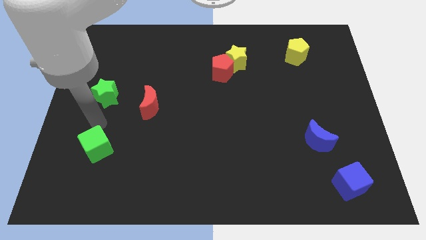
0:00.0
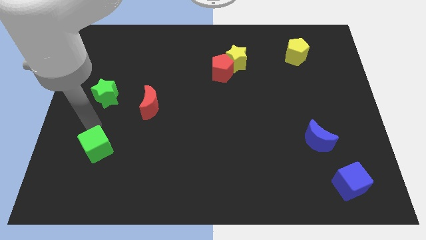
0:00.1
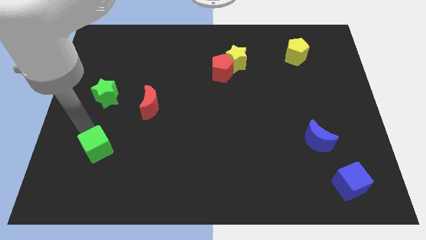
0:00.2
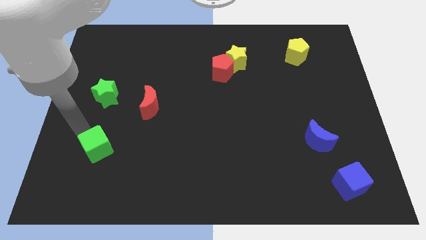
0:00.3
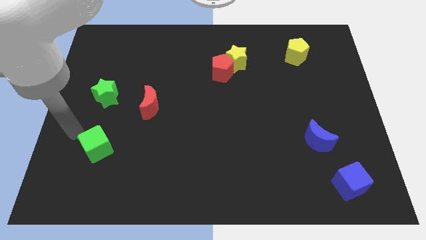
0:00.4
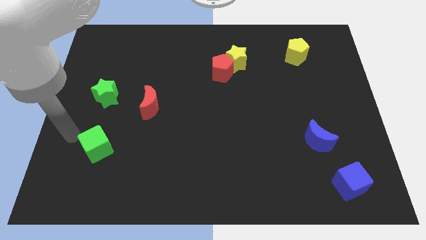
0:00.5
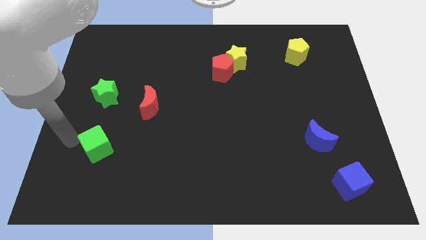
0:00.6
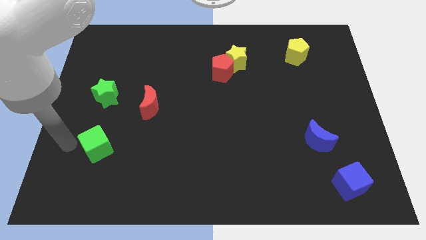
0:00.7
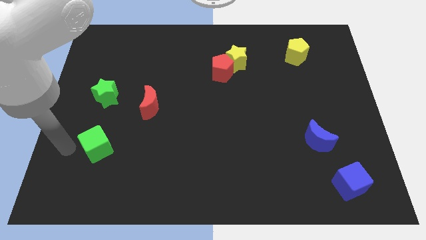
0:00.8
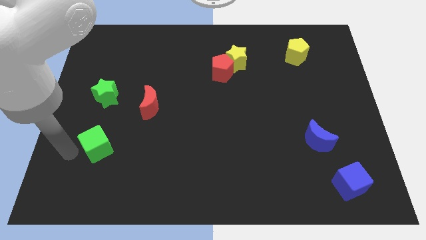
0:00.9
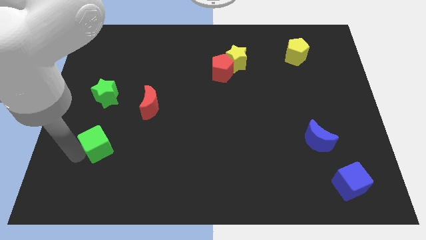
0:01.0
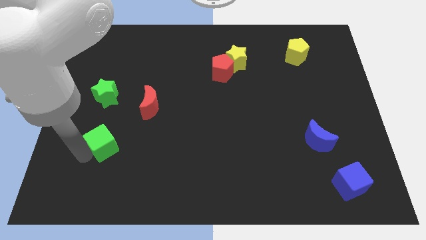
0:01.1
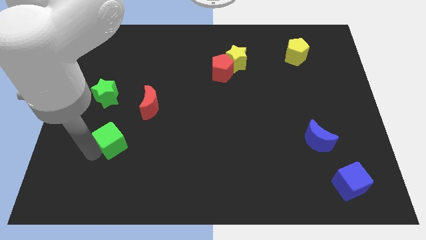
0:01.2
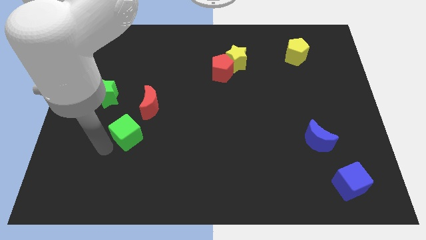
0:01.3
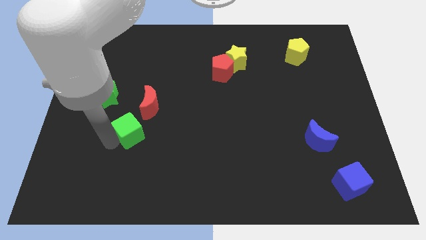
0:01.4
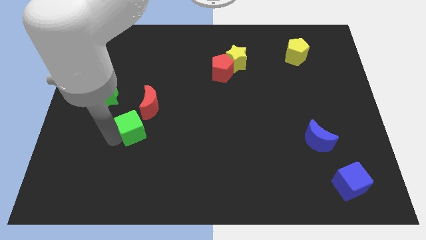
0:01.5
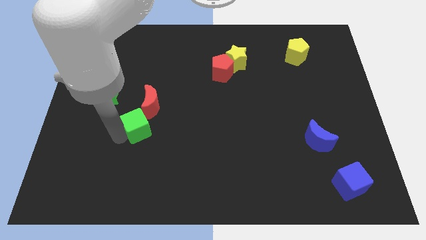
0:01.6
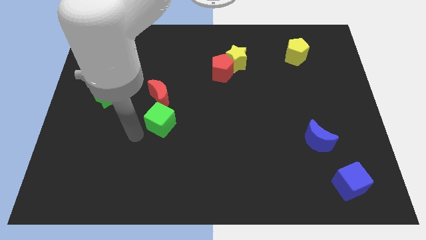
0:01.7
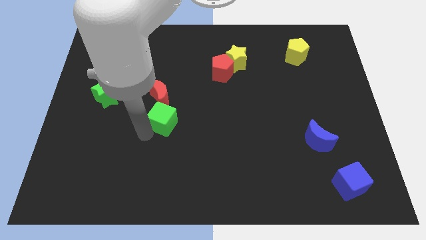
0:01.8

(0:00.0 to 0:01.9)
push the green cube to the bottom of the red crescent

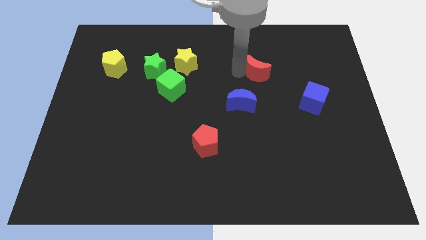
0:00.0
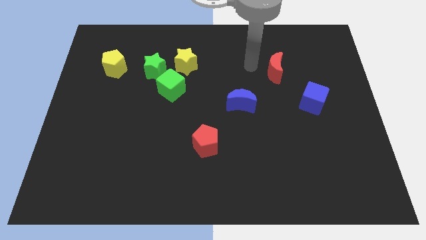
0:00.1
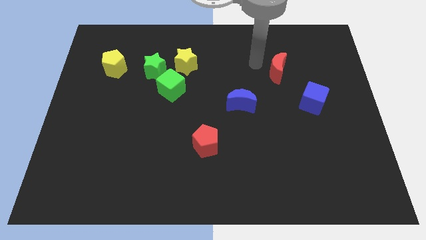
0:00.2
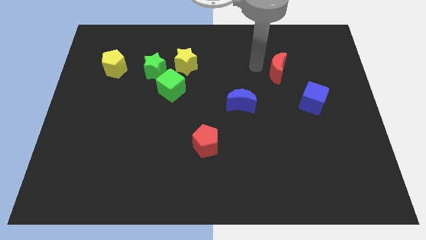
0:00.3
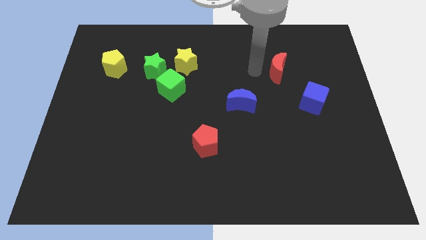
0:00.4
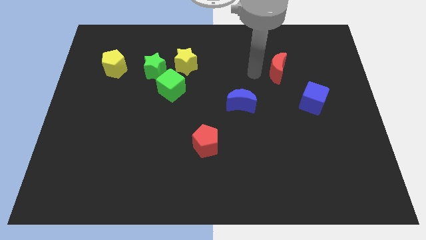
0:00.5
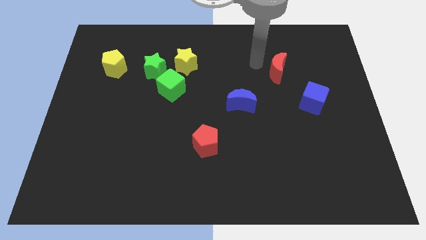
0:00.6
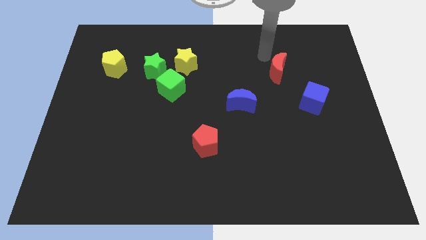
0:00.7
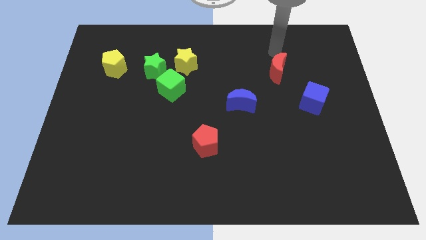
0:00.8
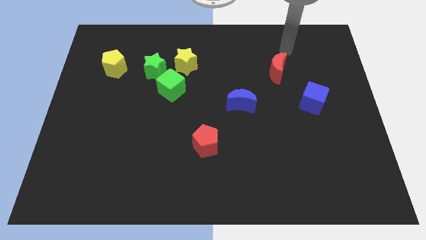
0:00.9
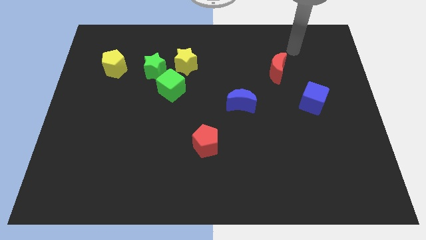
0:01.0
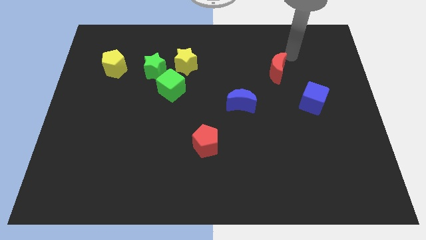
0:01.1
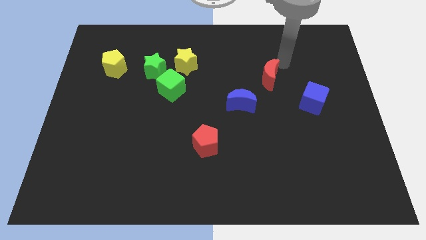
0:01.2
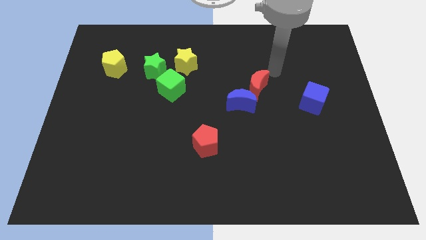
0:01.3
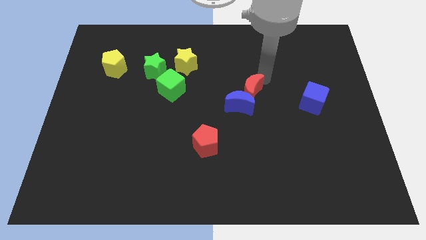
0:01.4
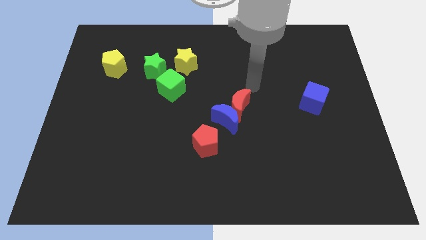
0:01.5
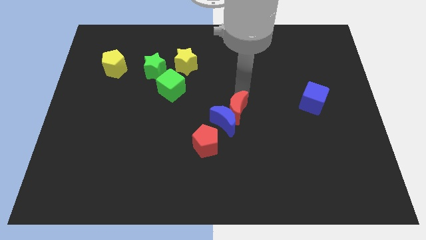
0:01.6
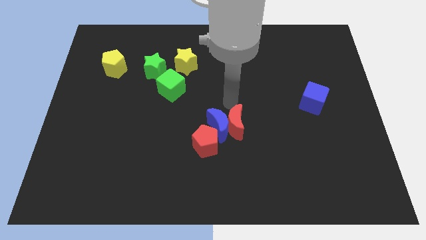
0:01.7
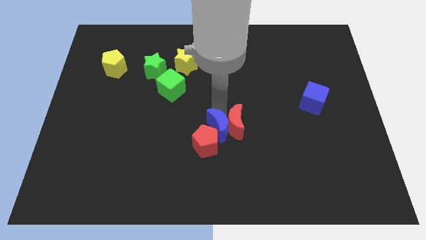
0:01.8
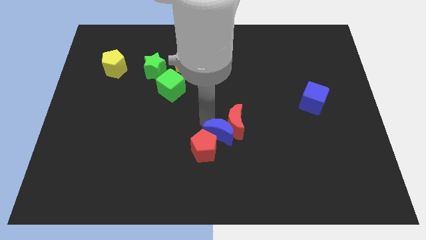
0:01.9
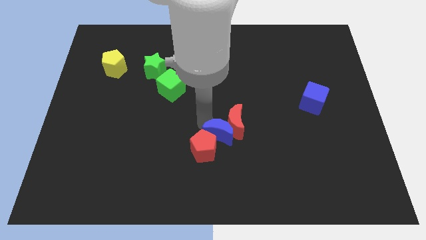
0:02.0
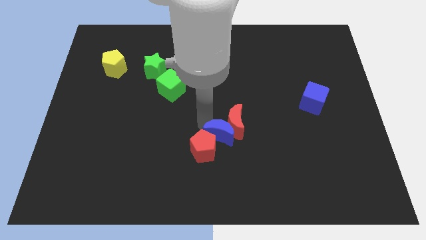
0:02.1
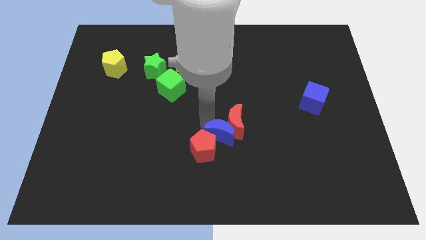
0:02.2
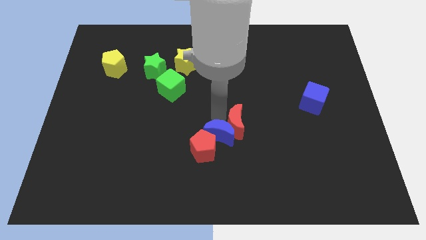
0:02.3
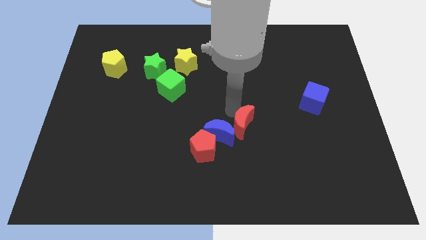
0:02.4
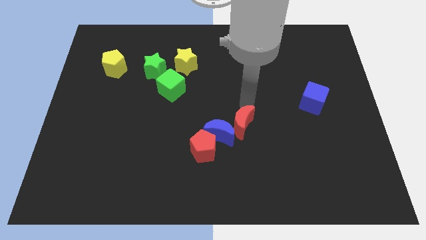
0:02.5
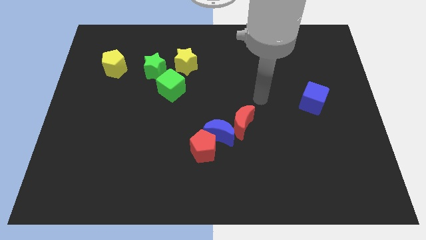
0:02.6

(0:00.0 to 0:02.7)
push red crescent into the blue crescent beside red pentagon

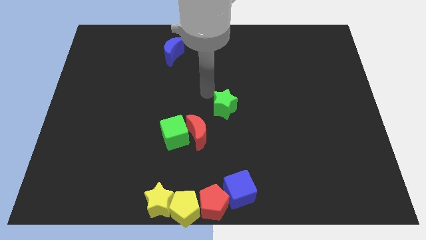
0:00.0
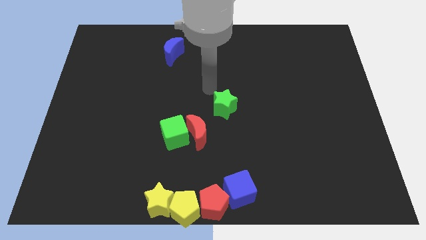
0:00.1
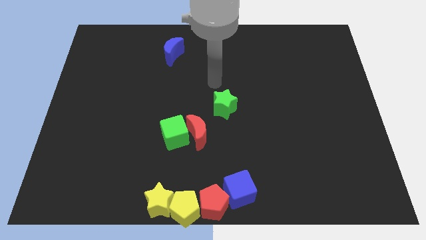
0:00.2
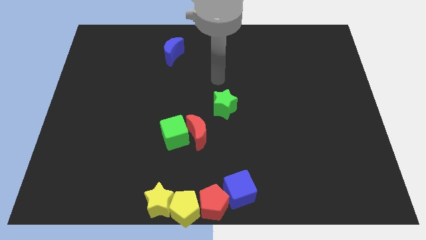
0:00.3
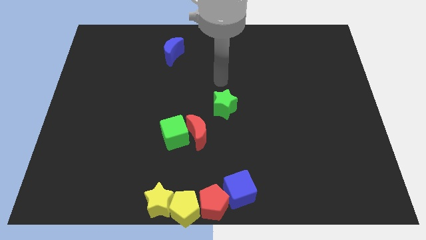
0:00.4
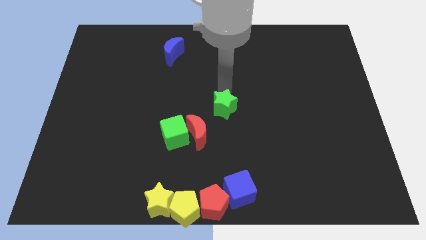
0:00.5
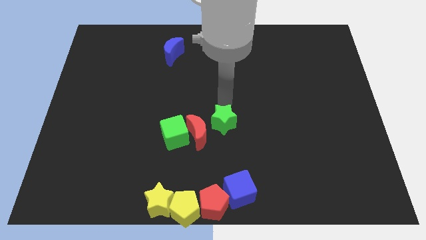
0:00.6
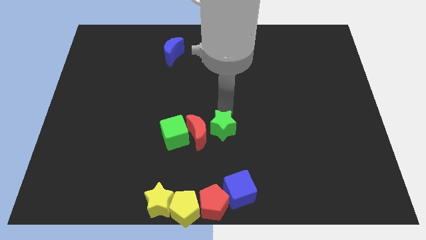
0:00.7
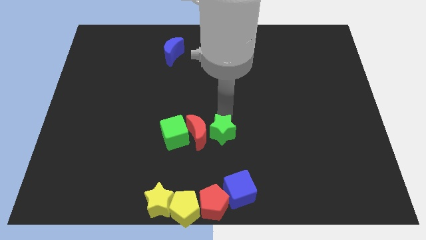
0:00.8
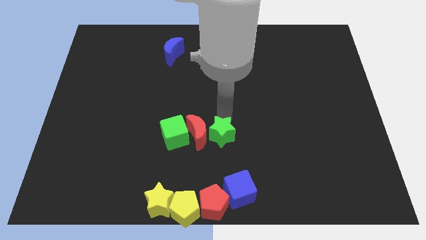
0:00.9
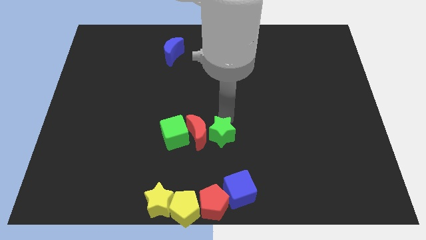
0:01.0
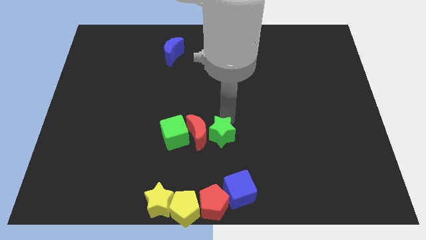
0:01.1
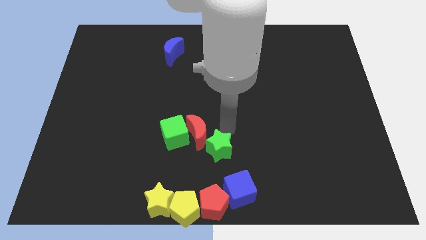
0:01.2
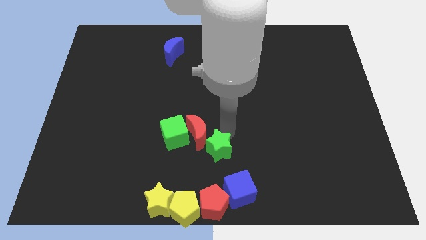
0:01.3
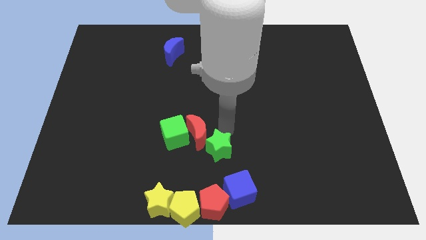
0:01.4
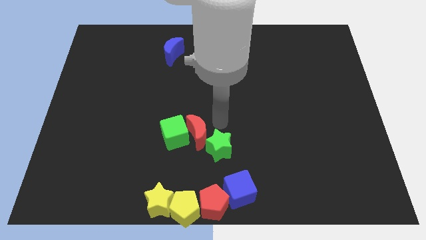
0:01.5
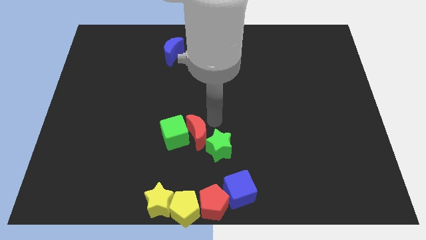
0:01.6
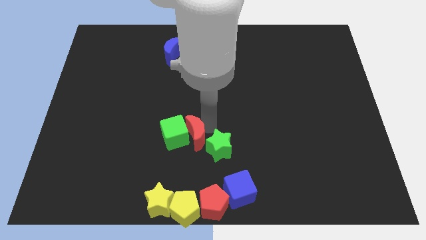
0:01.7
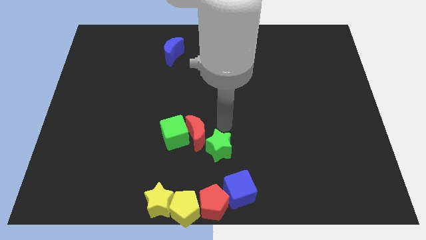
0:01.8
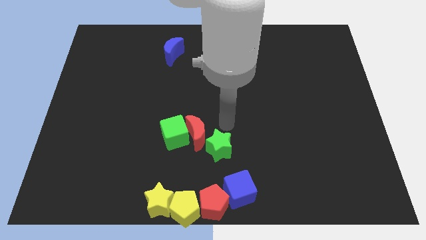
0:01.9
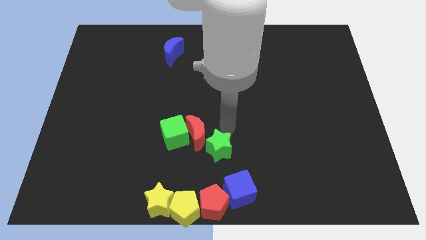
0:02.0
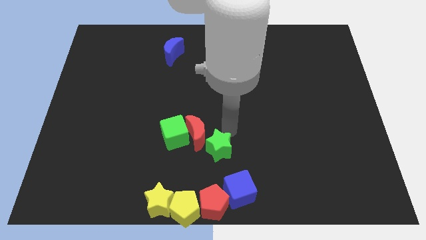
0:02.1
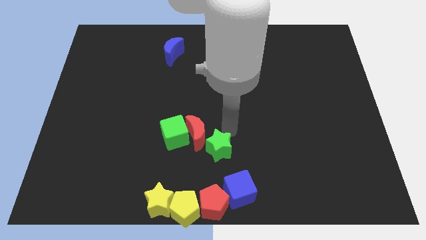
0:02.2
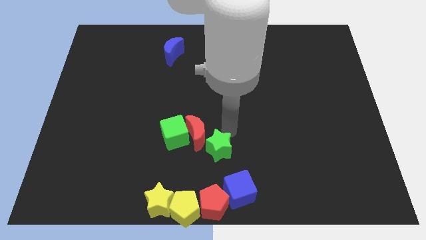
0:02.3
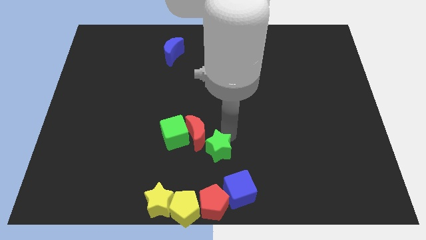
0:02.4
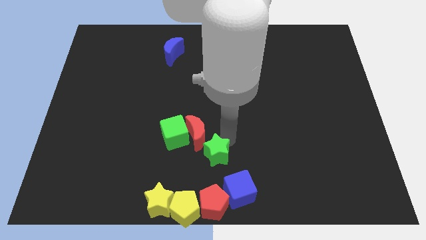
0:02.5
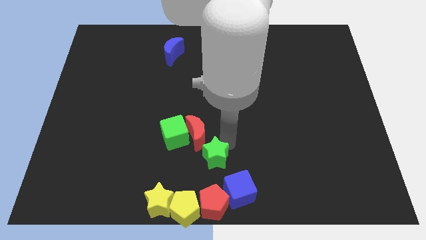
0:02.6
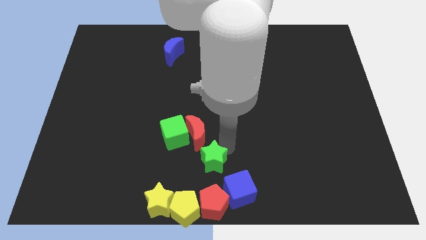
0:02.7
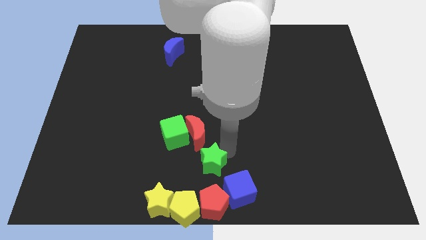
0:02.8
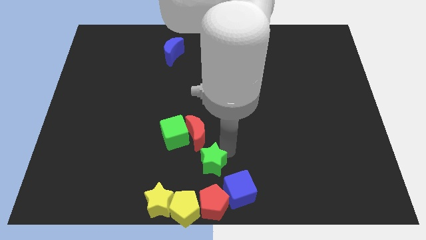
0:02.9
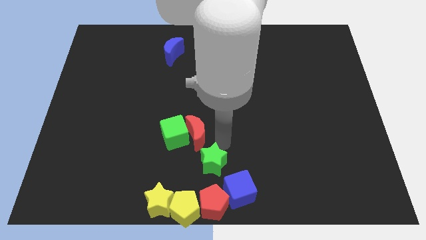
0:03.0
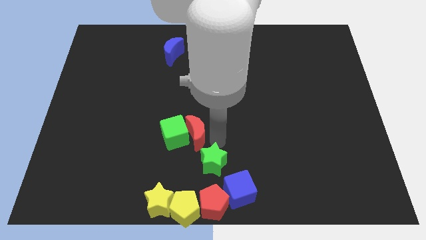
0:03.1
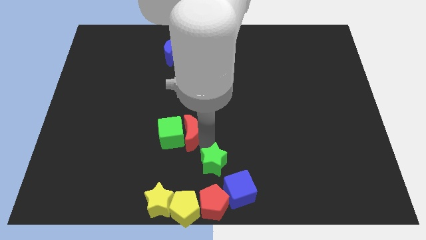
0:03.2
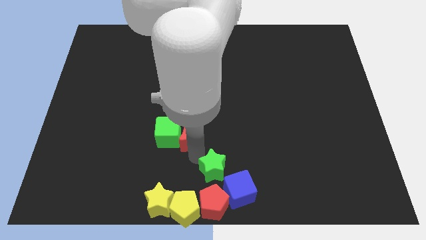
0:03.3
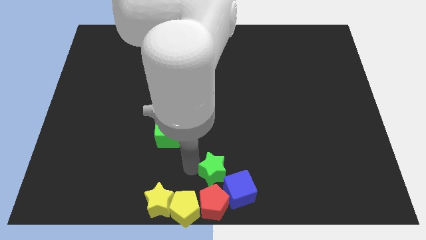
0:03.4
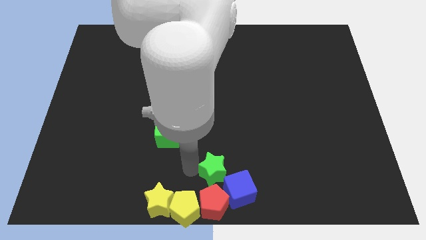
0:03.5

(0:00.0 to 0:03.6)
push the green star to the top of the red pentagon

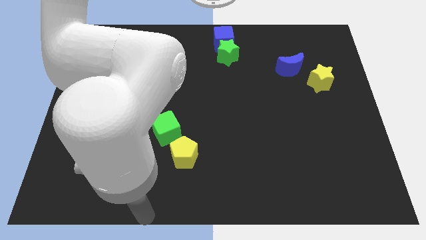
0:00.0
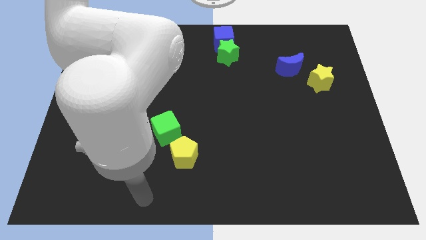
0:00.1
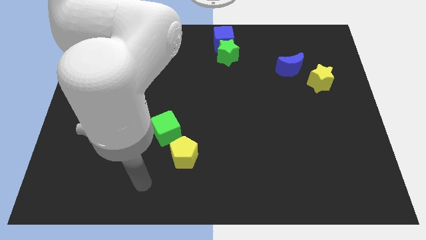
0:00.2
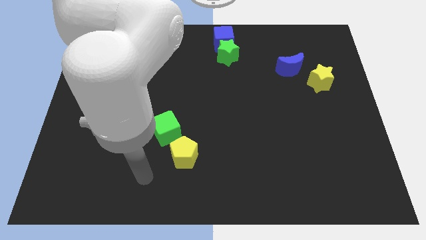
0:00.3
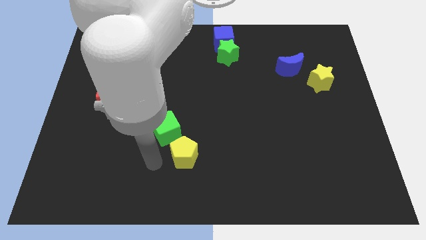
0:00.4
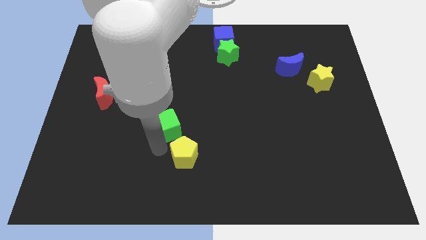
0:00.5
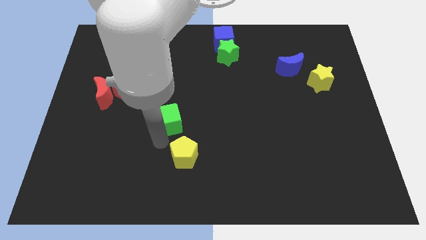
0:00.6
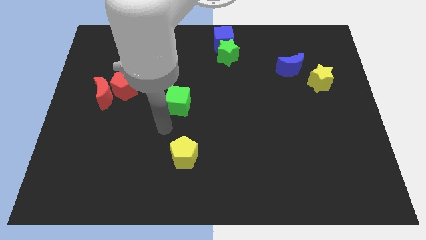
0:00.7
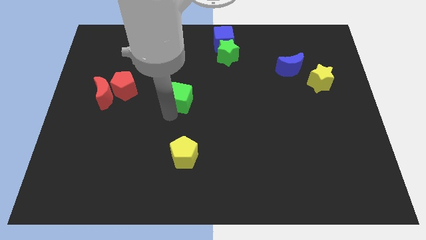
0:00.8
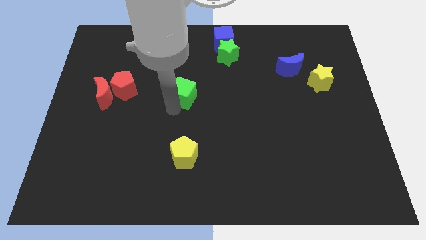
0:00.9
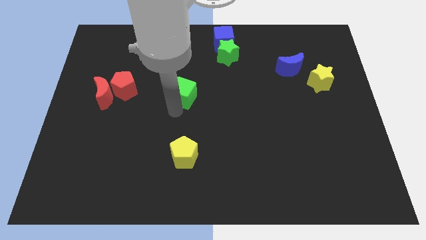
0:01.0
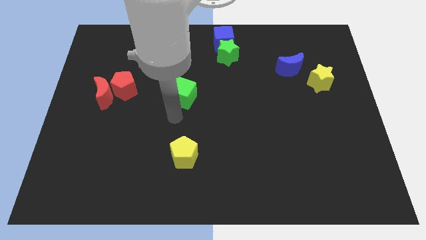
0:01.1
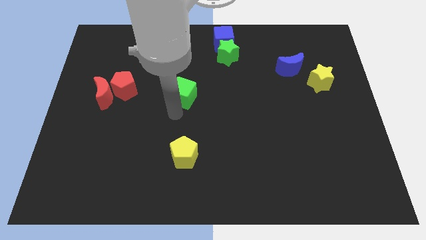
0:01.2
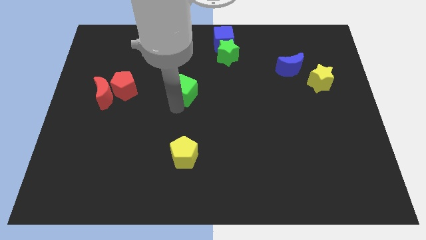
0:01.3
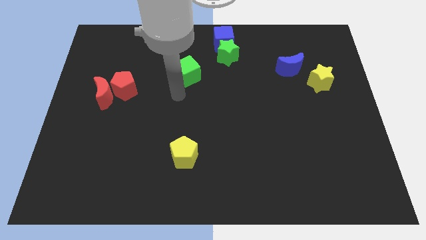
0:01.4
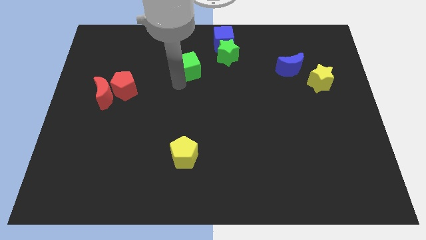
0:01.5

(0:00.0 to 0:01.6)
push the green cube top side of the yellow pentagon vertically
